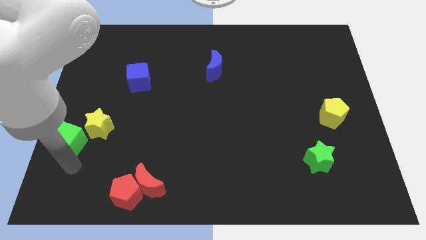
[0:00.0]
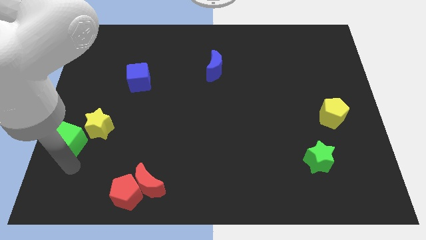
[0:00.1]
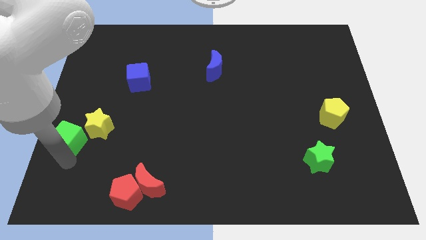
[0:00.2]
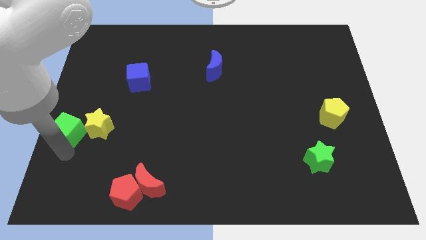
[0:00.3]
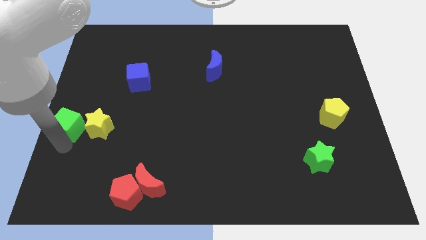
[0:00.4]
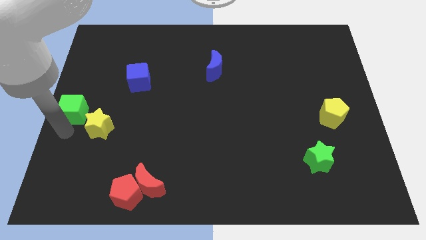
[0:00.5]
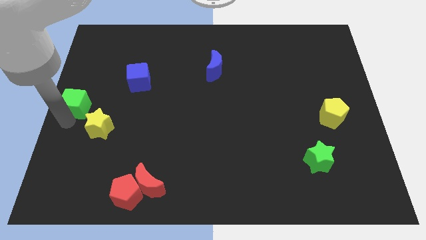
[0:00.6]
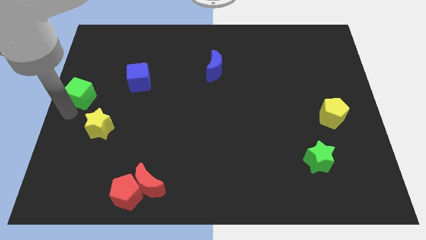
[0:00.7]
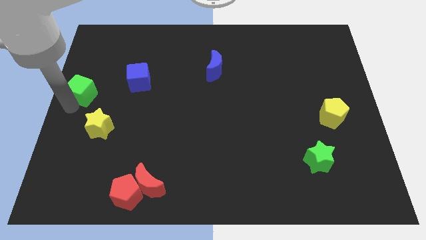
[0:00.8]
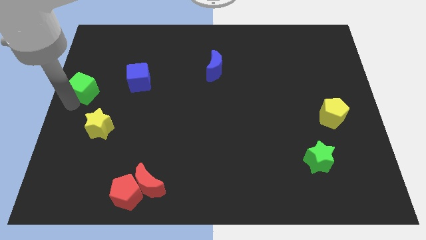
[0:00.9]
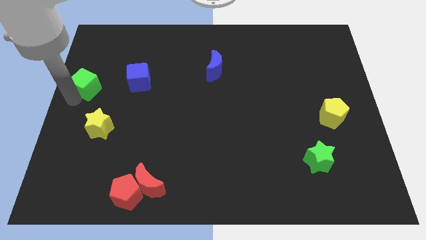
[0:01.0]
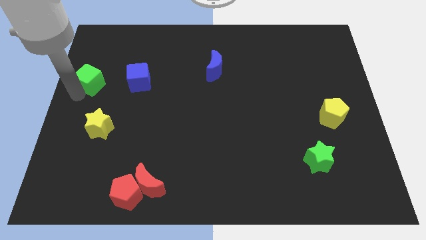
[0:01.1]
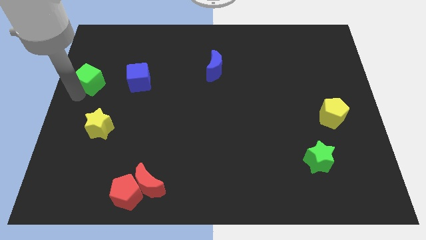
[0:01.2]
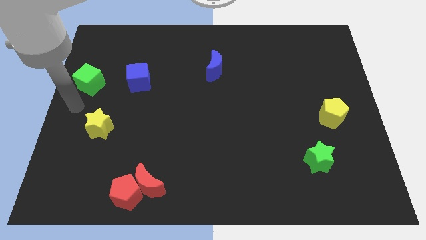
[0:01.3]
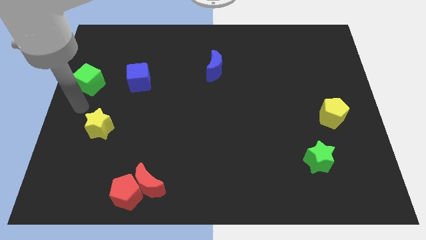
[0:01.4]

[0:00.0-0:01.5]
move the green cube to the left of the blue cube

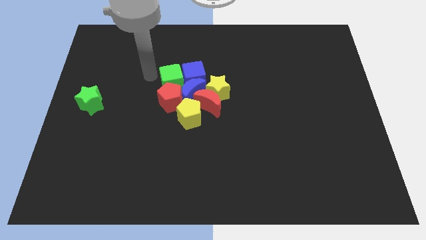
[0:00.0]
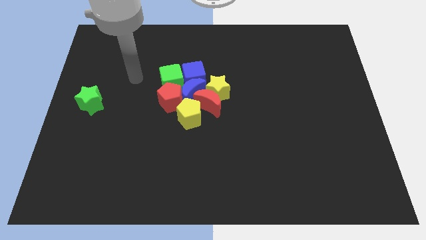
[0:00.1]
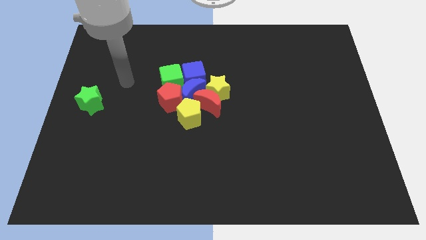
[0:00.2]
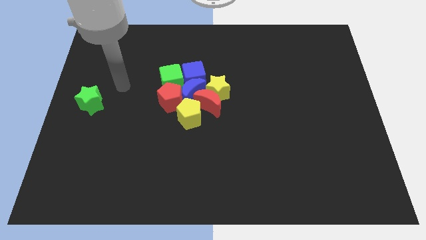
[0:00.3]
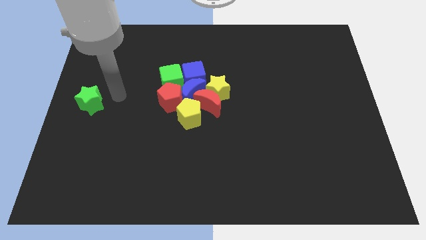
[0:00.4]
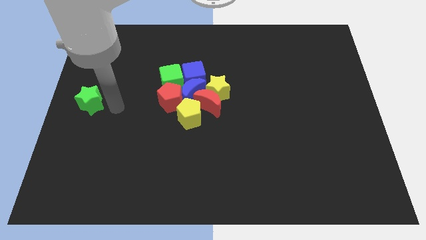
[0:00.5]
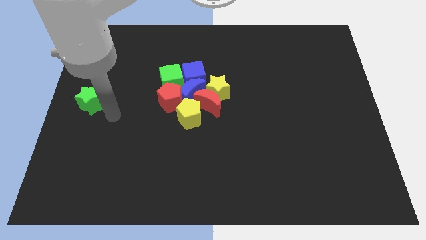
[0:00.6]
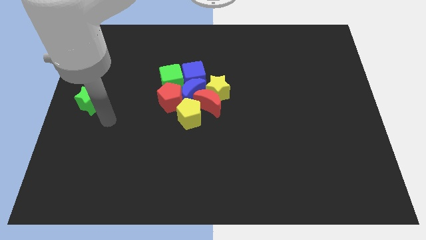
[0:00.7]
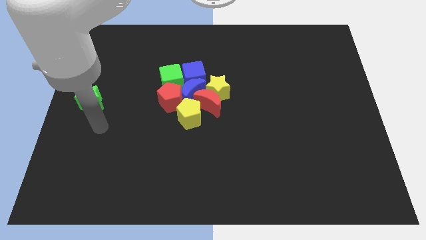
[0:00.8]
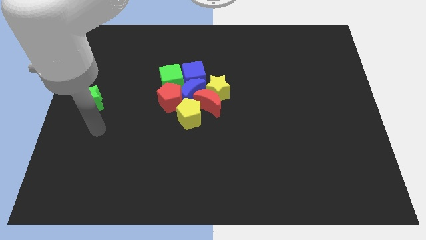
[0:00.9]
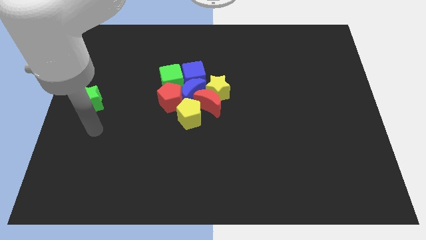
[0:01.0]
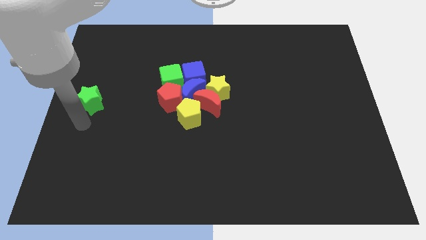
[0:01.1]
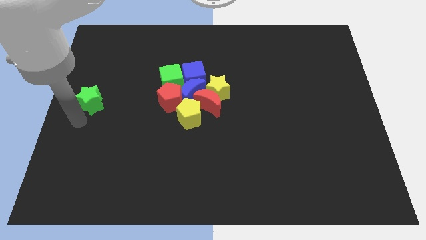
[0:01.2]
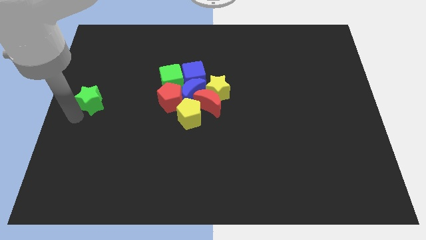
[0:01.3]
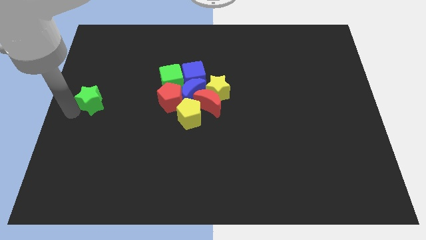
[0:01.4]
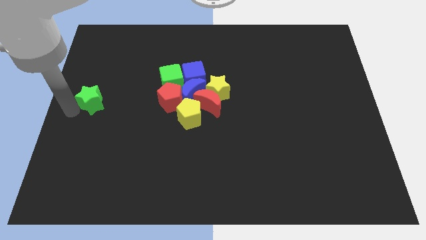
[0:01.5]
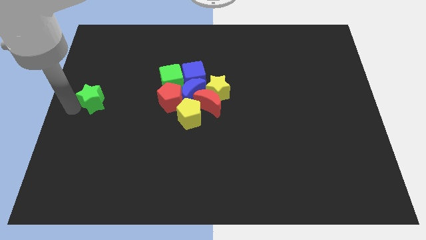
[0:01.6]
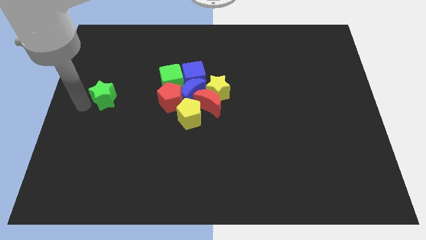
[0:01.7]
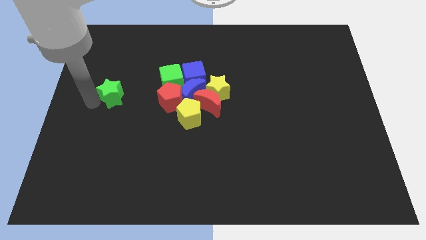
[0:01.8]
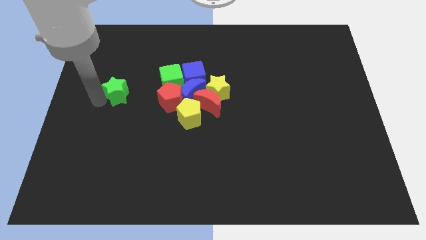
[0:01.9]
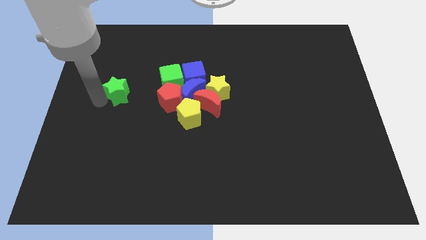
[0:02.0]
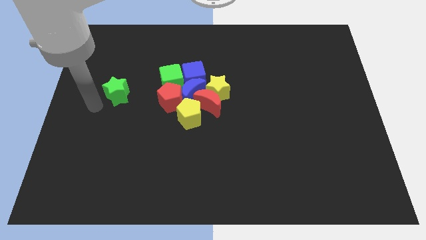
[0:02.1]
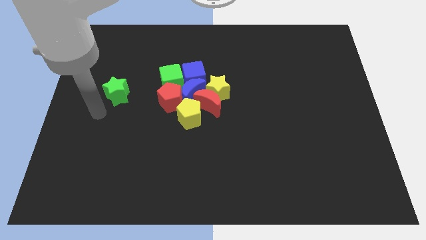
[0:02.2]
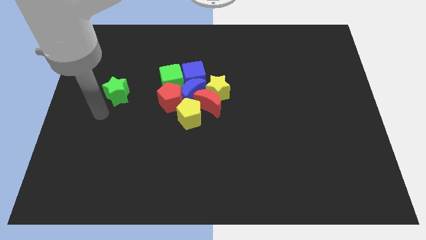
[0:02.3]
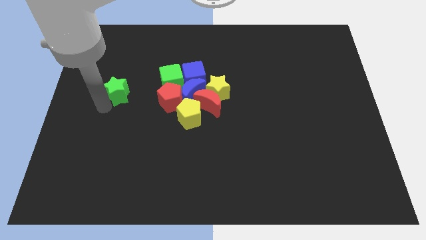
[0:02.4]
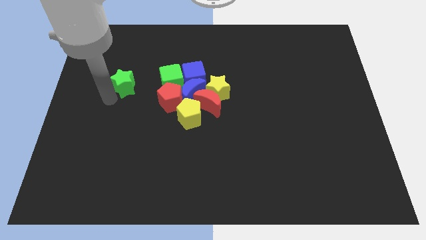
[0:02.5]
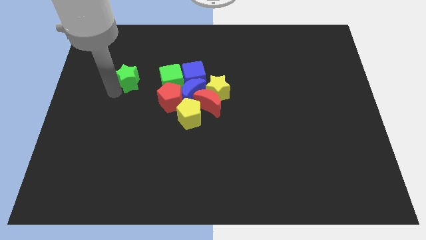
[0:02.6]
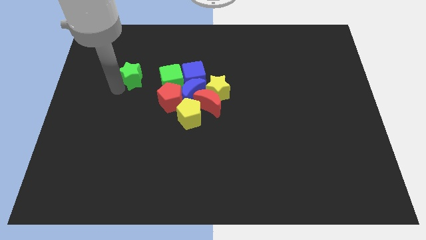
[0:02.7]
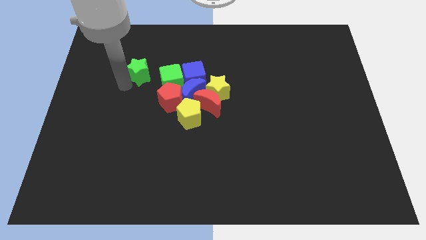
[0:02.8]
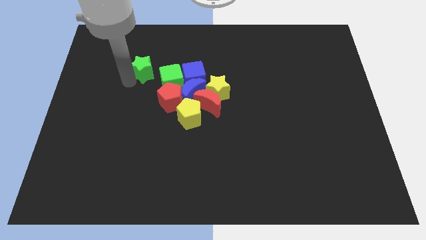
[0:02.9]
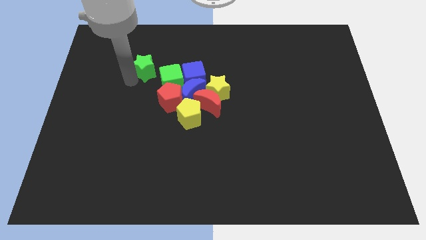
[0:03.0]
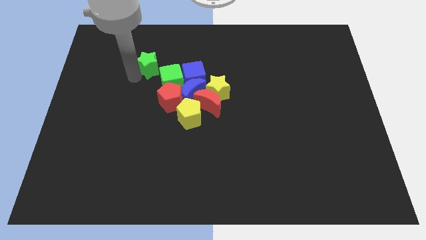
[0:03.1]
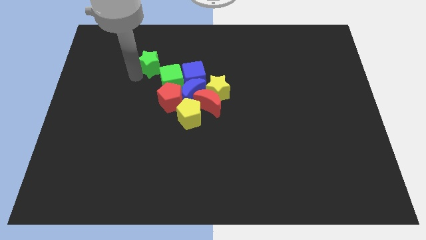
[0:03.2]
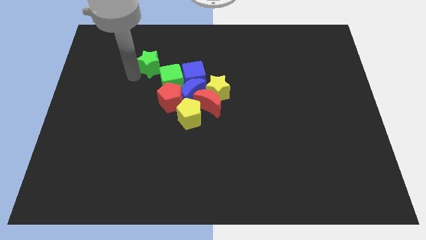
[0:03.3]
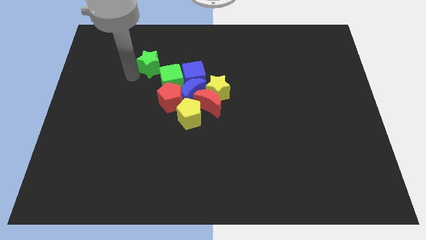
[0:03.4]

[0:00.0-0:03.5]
move the green star above the green cube

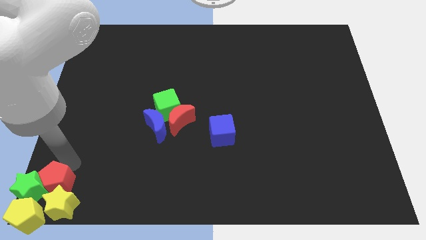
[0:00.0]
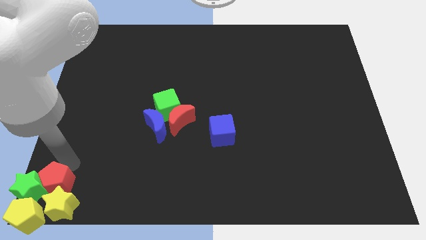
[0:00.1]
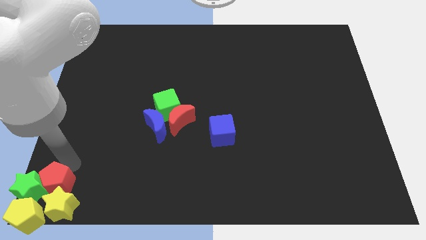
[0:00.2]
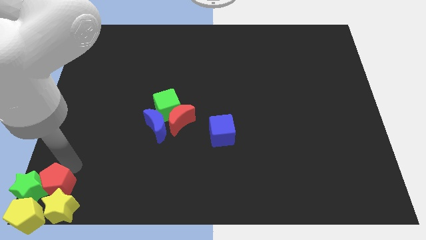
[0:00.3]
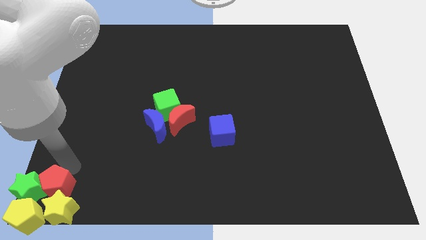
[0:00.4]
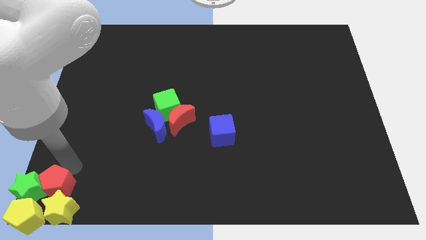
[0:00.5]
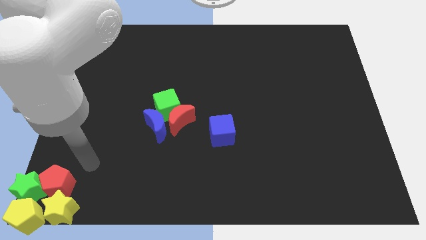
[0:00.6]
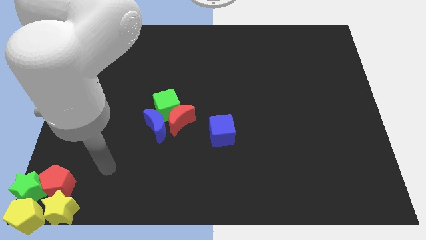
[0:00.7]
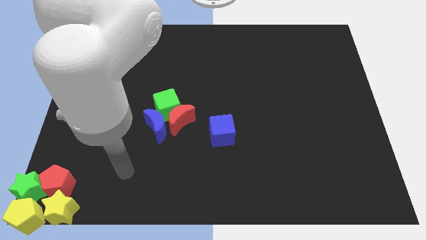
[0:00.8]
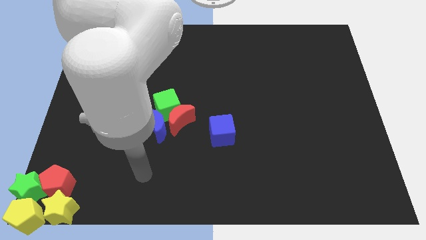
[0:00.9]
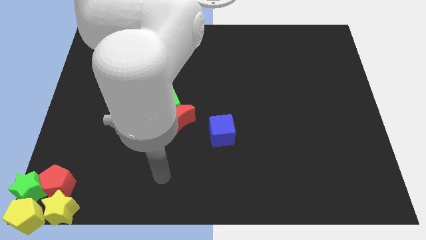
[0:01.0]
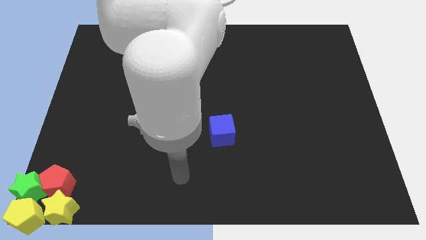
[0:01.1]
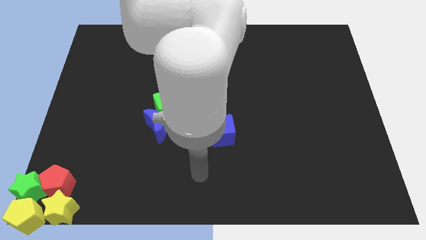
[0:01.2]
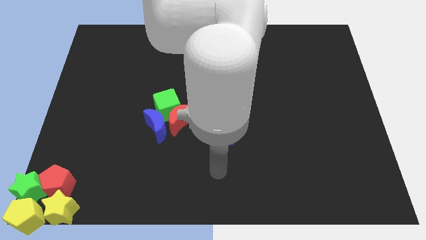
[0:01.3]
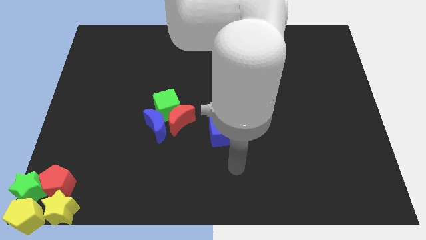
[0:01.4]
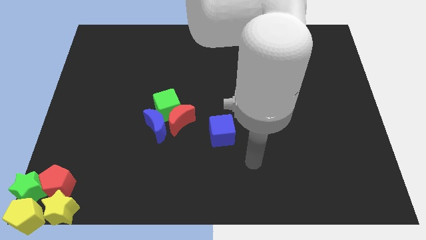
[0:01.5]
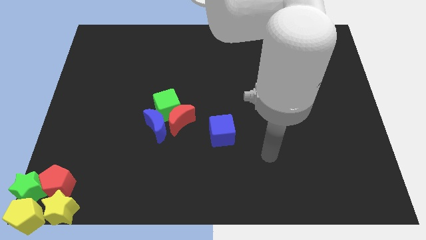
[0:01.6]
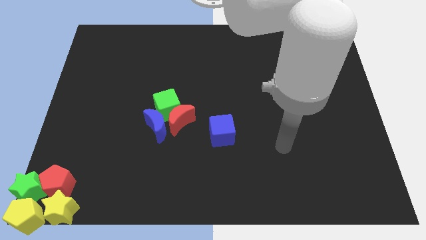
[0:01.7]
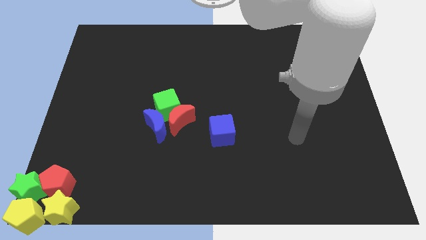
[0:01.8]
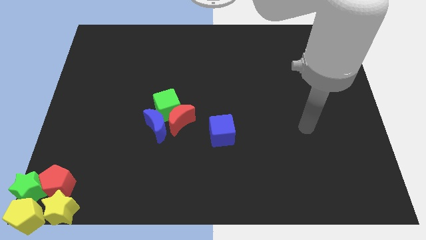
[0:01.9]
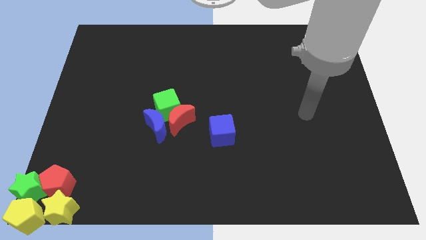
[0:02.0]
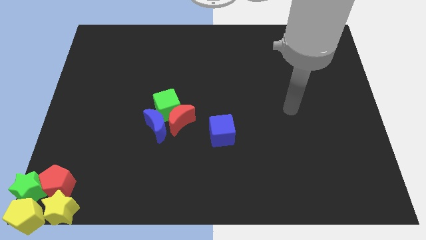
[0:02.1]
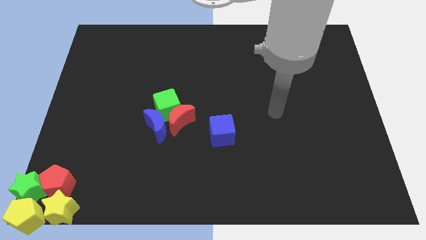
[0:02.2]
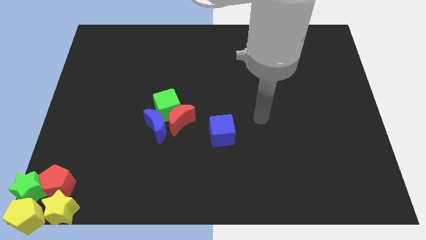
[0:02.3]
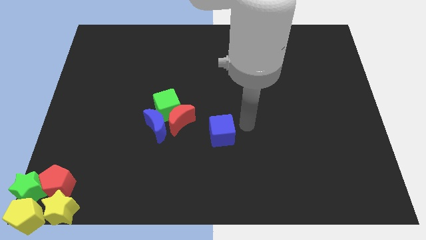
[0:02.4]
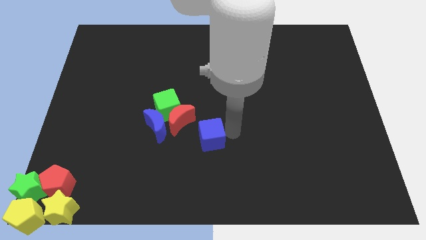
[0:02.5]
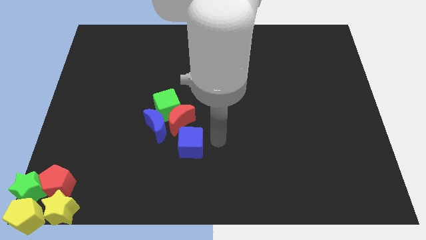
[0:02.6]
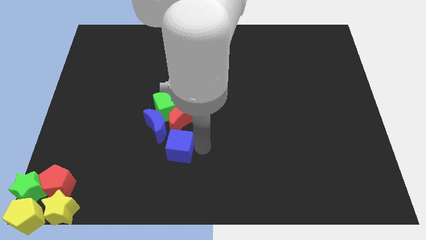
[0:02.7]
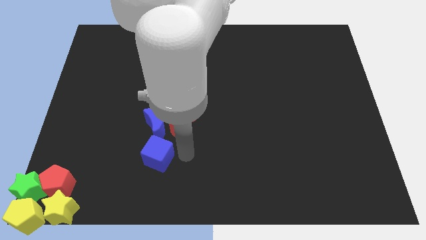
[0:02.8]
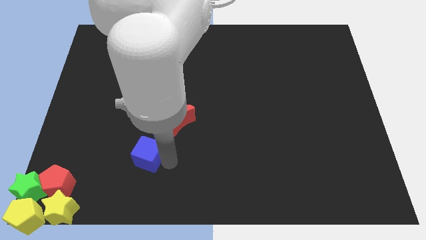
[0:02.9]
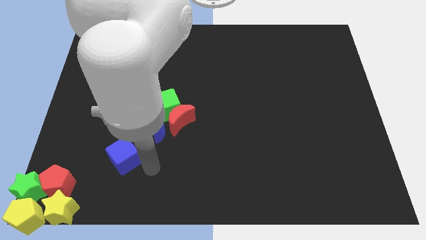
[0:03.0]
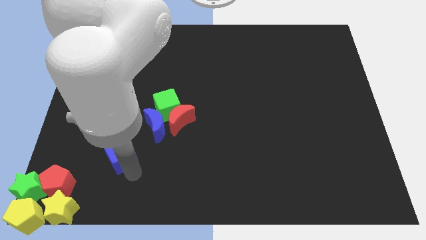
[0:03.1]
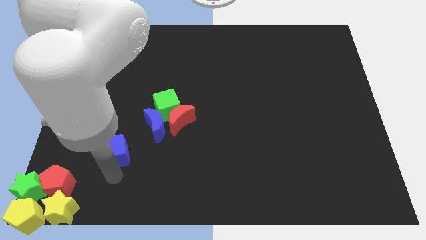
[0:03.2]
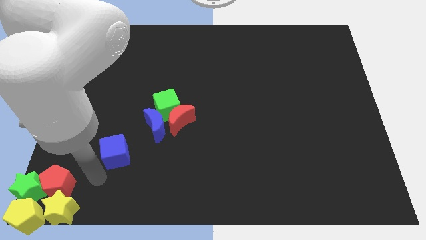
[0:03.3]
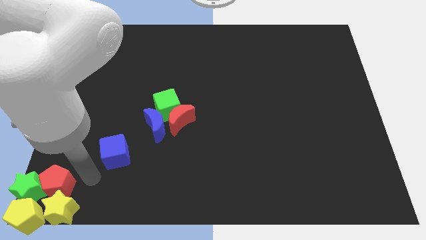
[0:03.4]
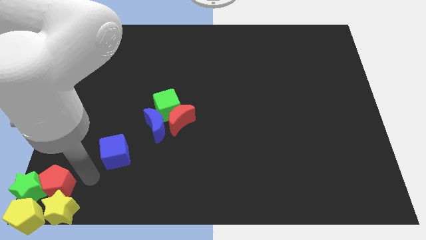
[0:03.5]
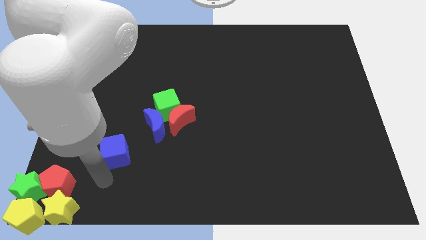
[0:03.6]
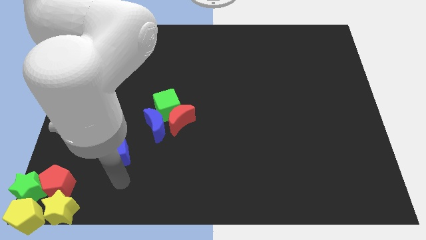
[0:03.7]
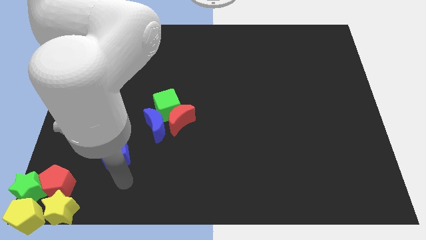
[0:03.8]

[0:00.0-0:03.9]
place the blue cube diagonal to red pentagon

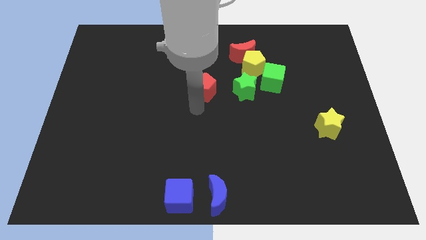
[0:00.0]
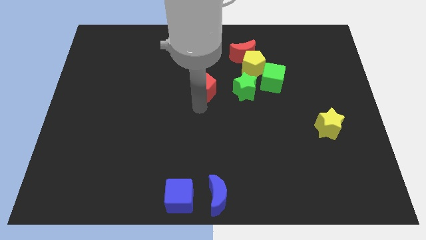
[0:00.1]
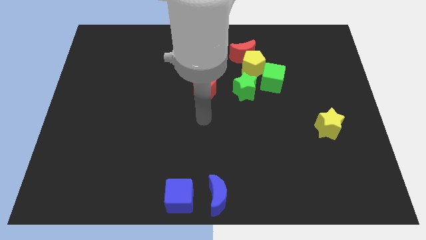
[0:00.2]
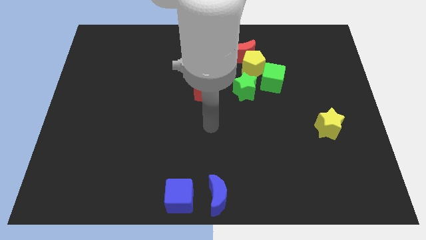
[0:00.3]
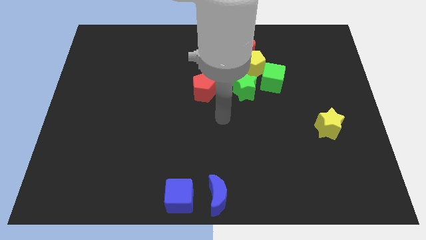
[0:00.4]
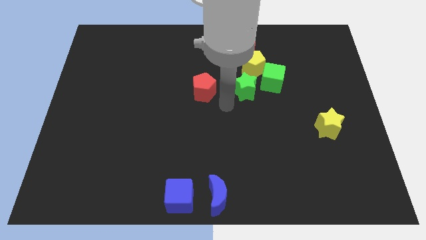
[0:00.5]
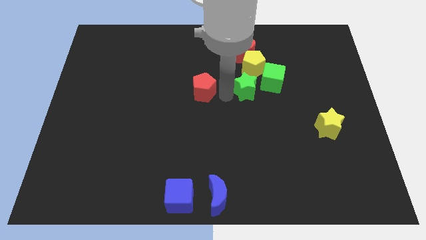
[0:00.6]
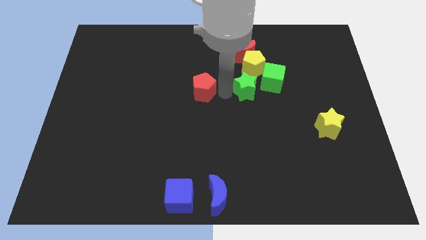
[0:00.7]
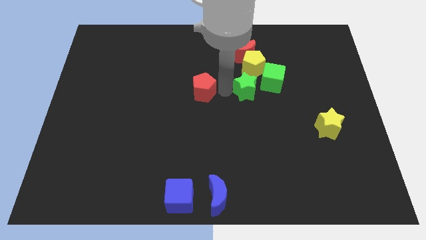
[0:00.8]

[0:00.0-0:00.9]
move arm in between red pentagon and green star
